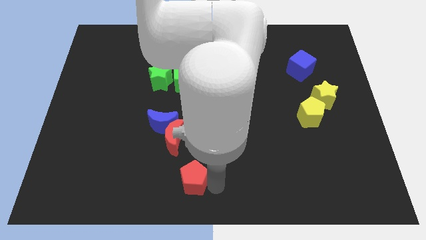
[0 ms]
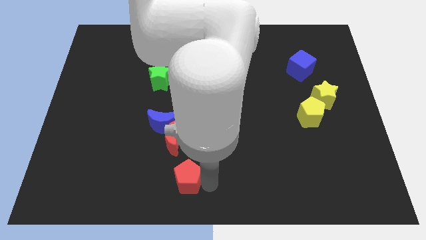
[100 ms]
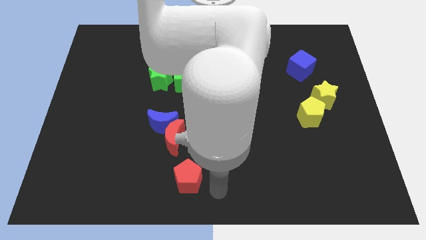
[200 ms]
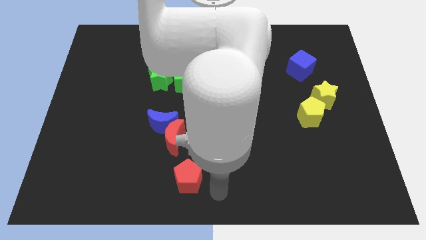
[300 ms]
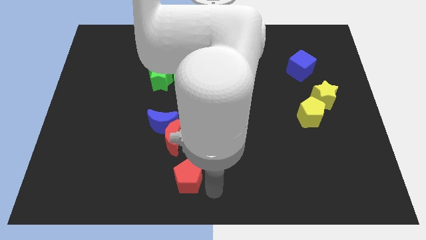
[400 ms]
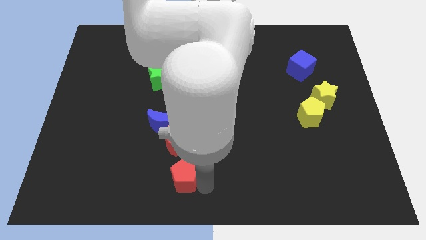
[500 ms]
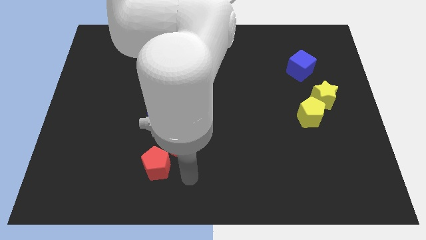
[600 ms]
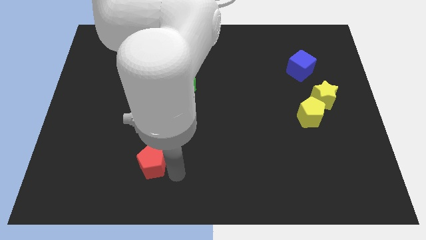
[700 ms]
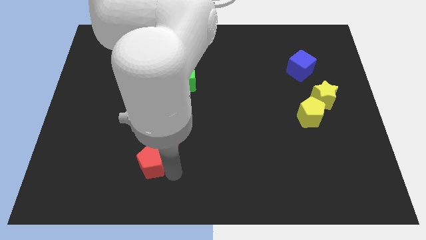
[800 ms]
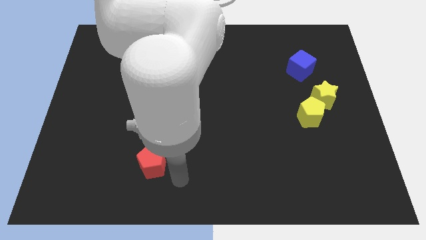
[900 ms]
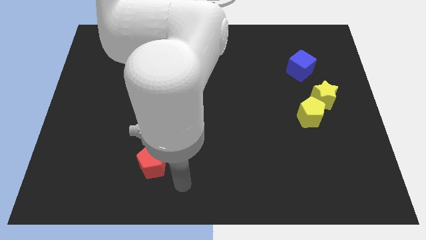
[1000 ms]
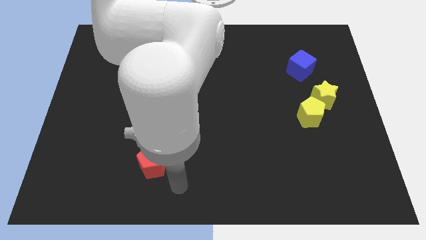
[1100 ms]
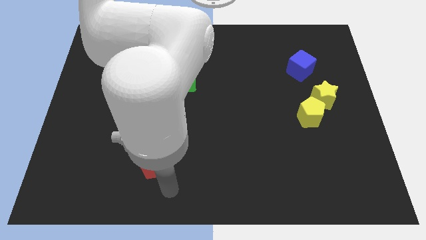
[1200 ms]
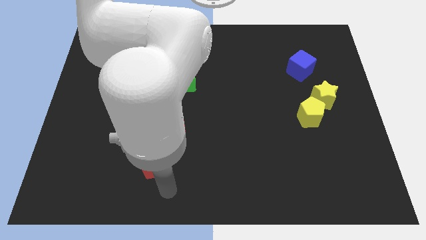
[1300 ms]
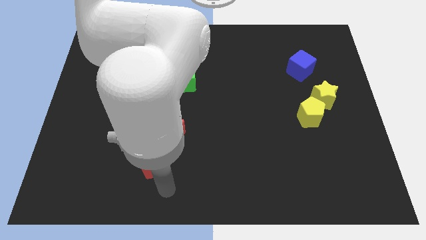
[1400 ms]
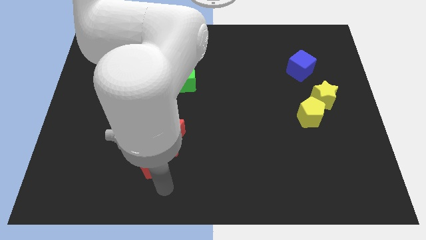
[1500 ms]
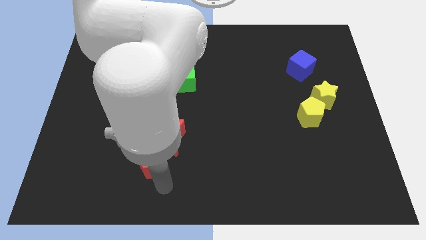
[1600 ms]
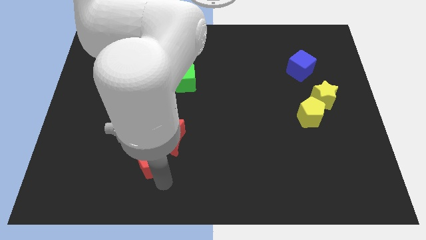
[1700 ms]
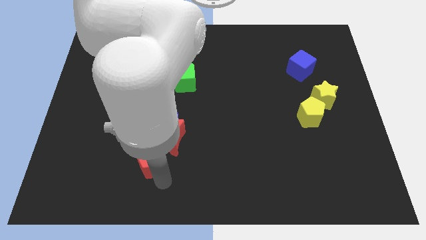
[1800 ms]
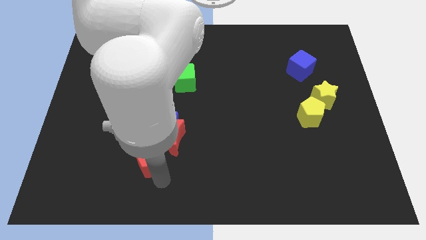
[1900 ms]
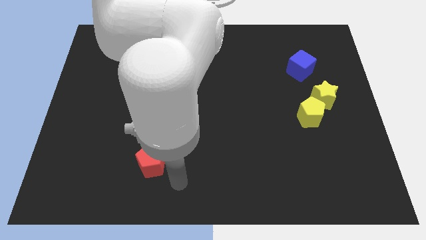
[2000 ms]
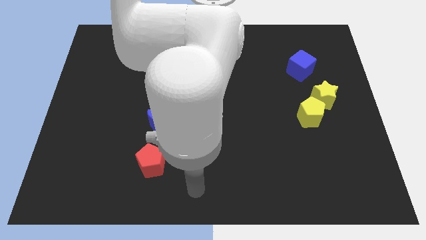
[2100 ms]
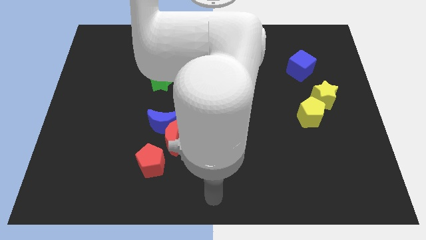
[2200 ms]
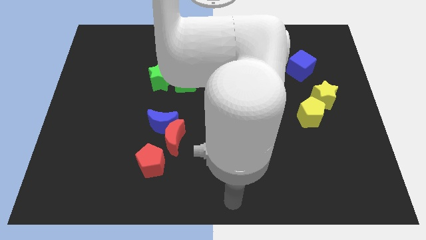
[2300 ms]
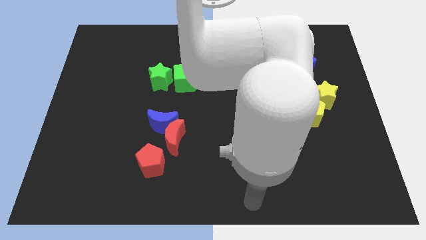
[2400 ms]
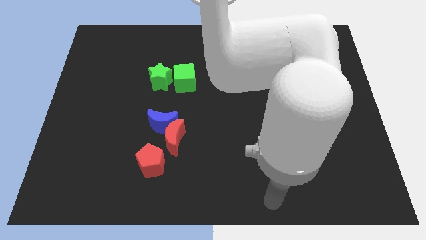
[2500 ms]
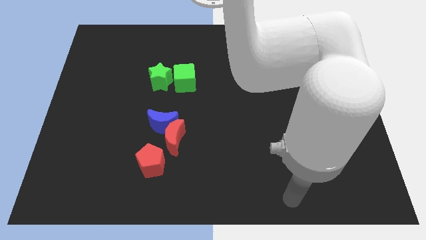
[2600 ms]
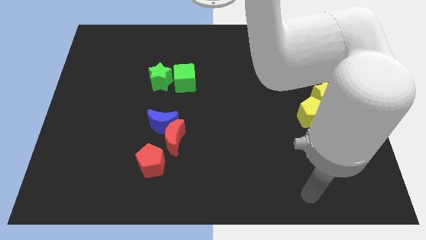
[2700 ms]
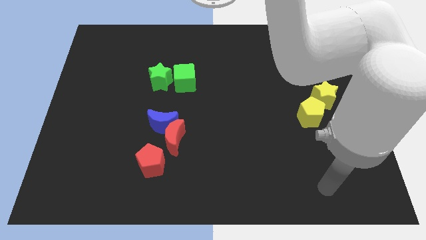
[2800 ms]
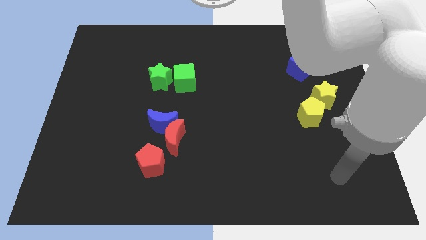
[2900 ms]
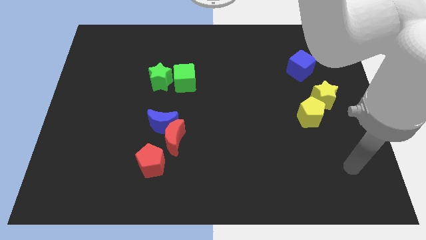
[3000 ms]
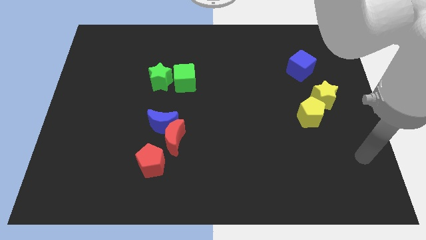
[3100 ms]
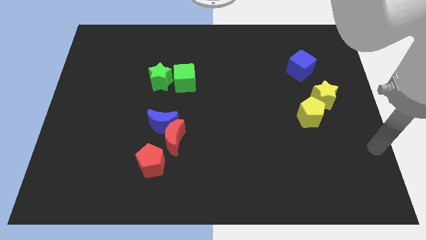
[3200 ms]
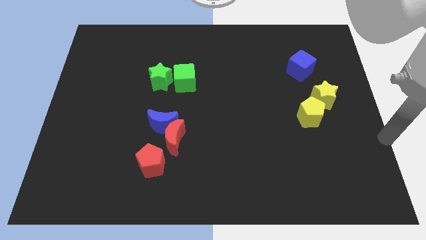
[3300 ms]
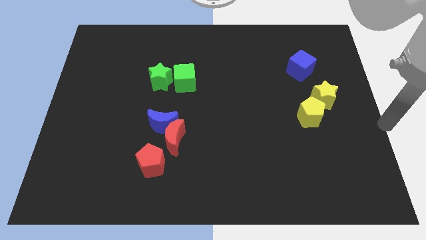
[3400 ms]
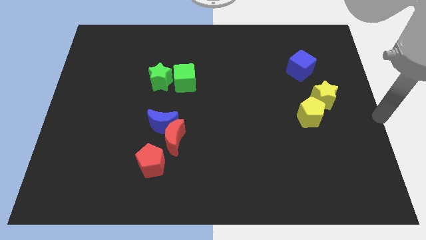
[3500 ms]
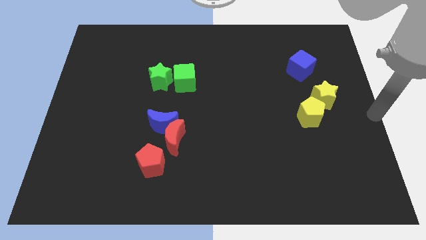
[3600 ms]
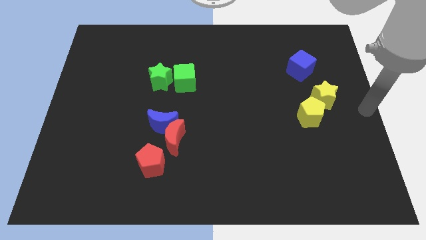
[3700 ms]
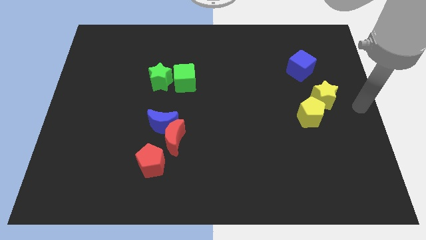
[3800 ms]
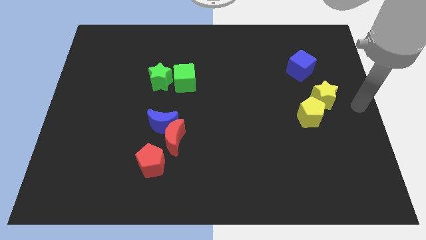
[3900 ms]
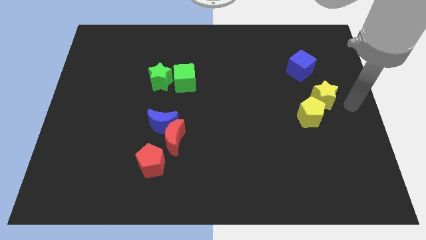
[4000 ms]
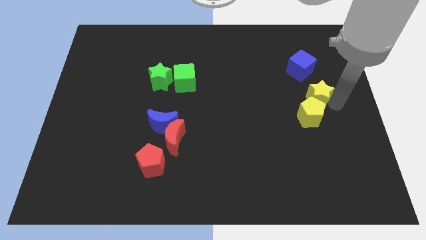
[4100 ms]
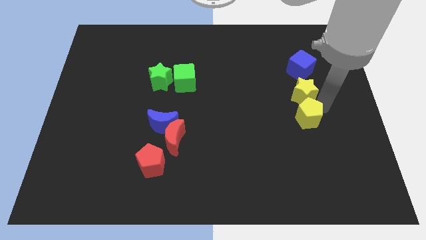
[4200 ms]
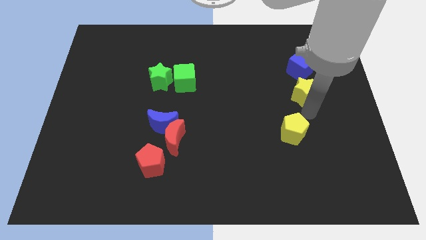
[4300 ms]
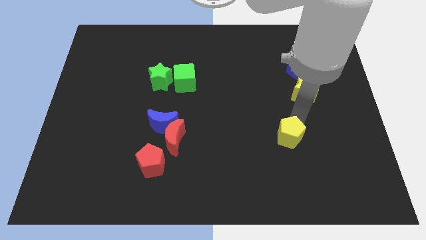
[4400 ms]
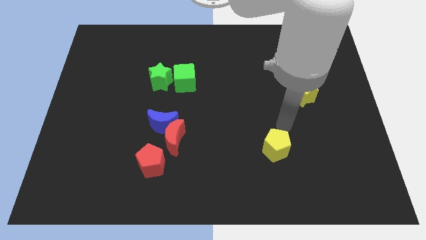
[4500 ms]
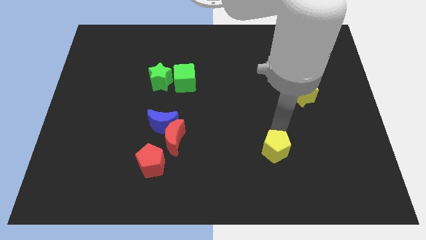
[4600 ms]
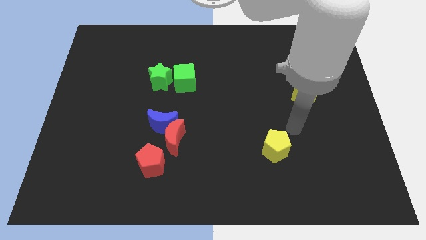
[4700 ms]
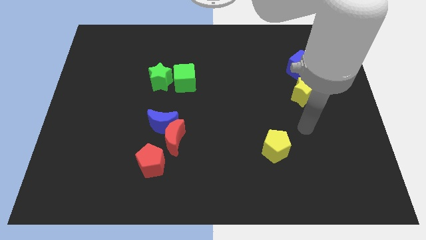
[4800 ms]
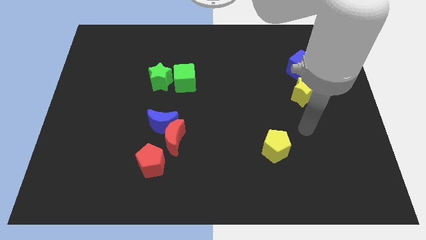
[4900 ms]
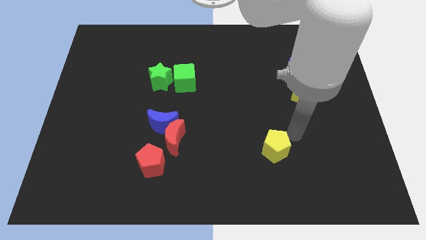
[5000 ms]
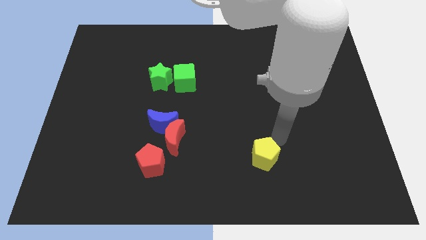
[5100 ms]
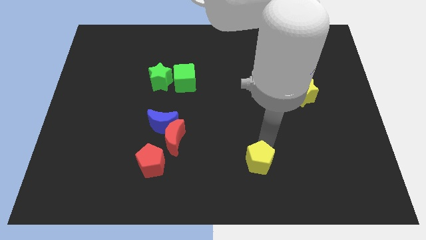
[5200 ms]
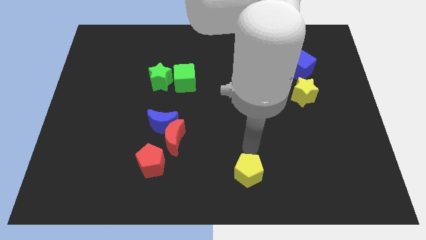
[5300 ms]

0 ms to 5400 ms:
push the yellow pentagon parallel to red pentagon

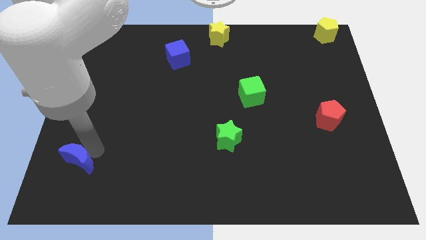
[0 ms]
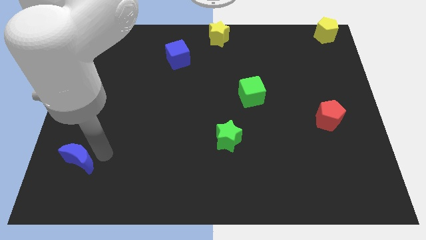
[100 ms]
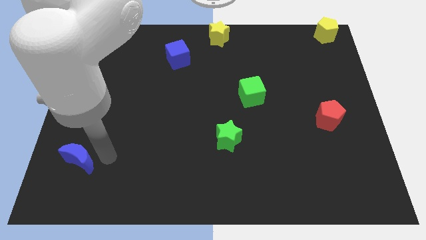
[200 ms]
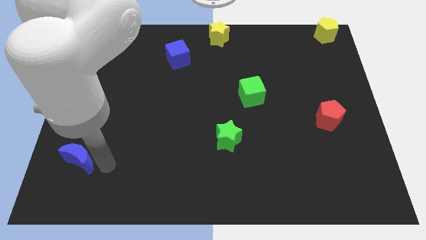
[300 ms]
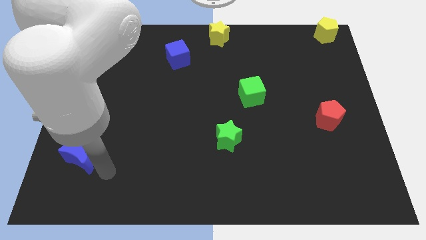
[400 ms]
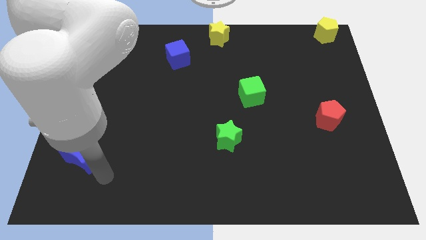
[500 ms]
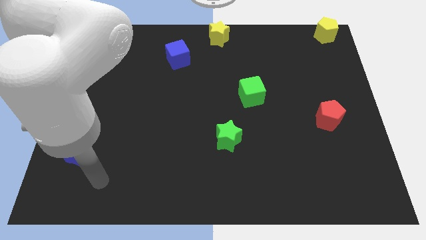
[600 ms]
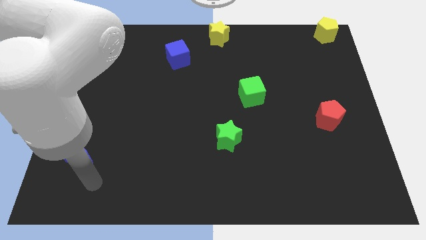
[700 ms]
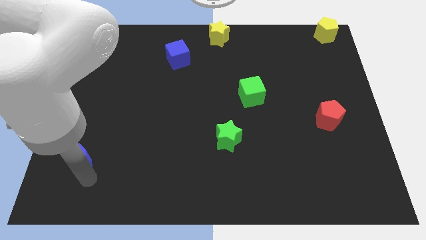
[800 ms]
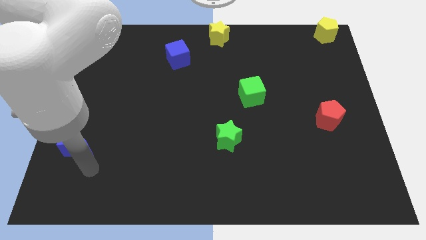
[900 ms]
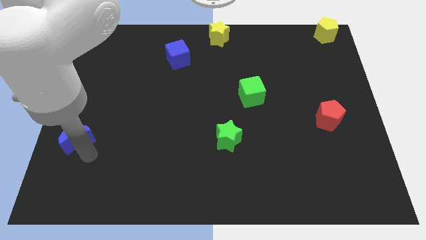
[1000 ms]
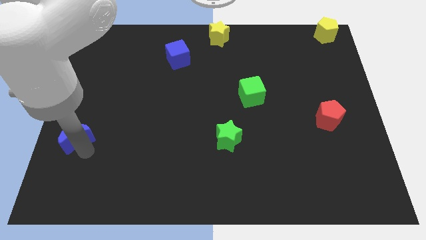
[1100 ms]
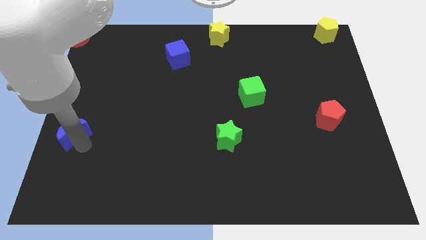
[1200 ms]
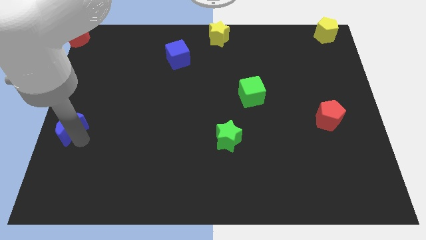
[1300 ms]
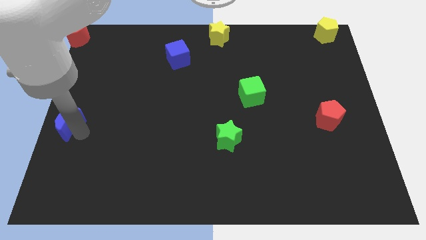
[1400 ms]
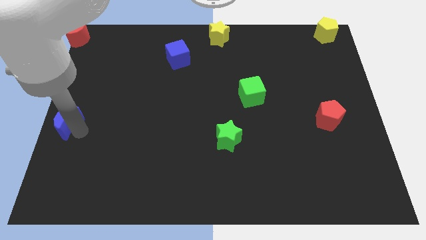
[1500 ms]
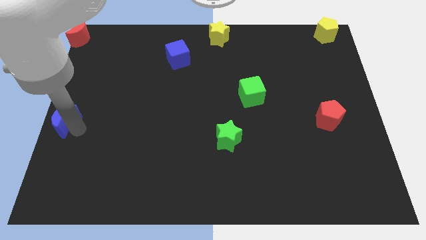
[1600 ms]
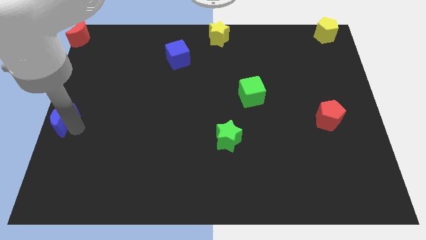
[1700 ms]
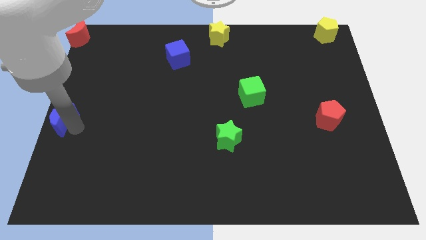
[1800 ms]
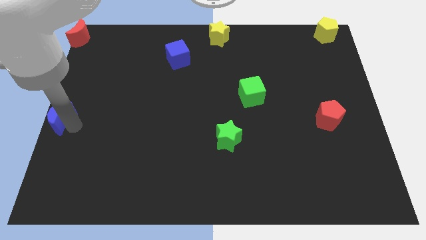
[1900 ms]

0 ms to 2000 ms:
move the blue moon to the bottom side of the red moon

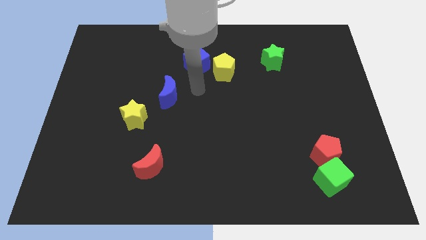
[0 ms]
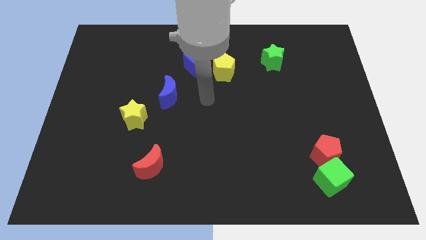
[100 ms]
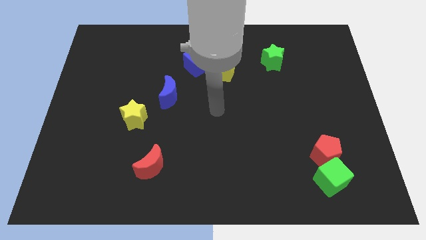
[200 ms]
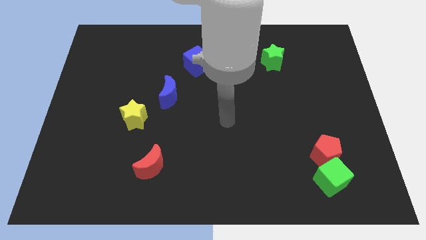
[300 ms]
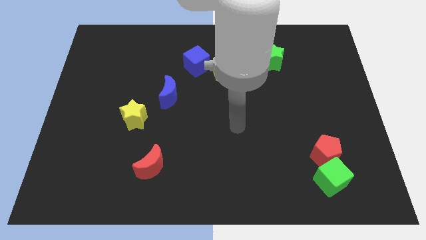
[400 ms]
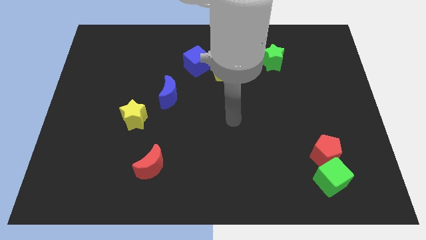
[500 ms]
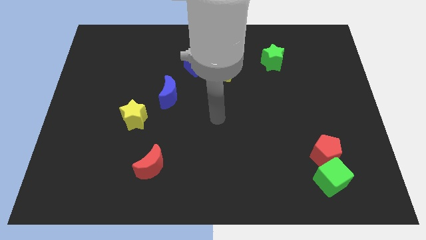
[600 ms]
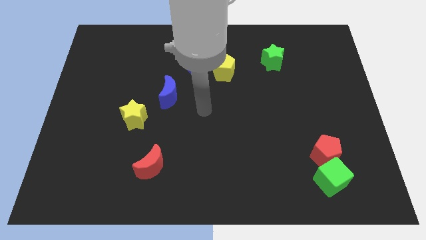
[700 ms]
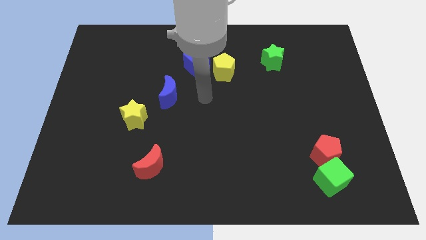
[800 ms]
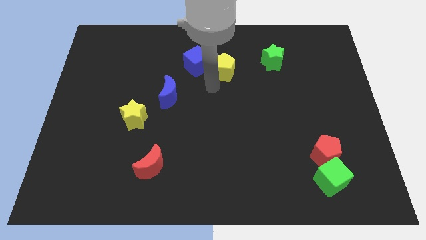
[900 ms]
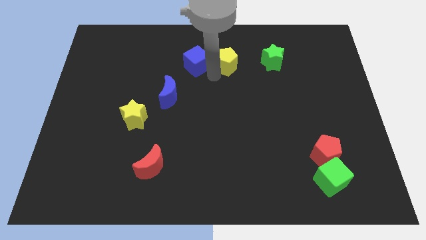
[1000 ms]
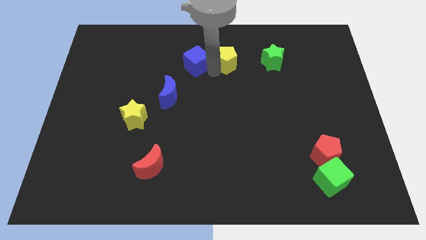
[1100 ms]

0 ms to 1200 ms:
slightly push the yellow pentagon to the top

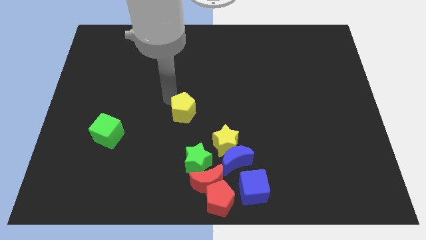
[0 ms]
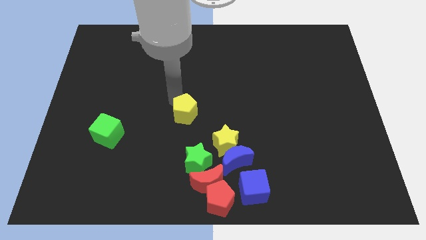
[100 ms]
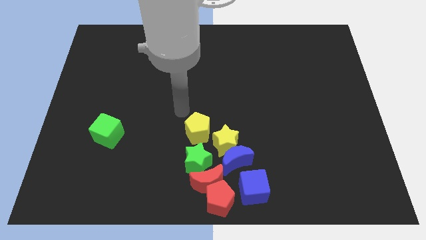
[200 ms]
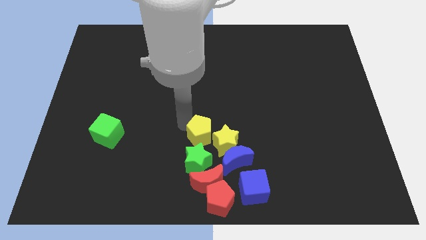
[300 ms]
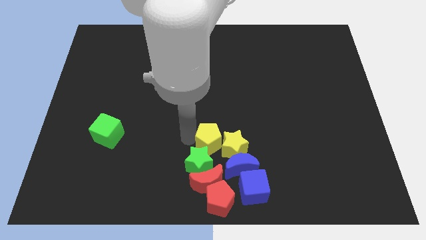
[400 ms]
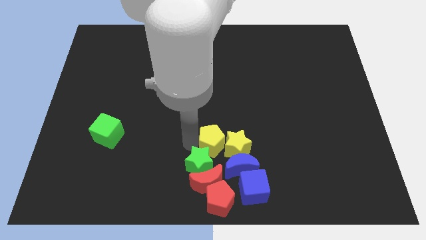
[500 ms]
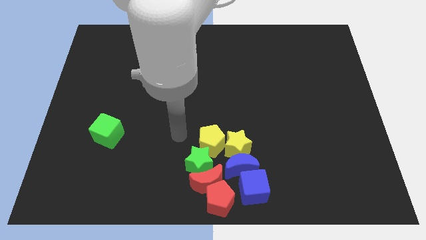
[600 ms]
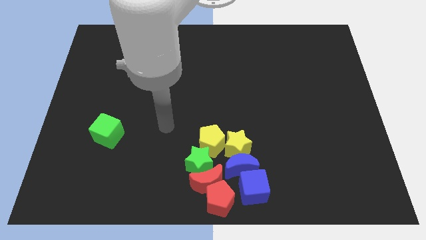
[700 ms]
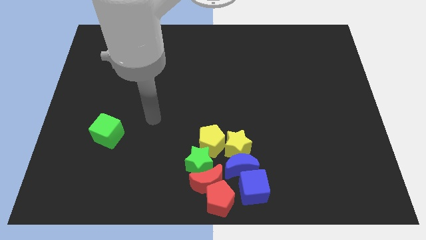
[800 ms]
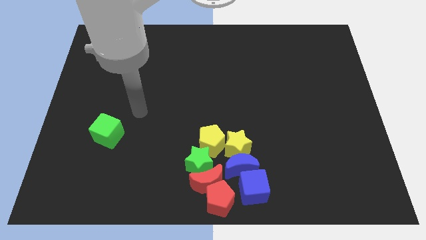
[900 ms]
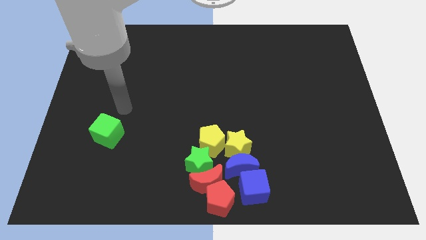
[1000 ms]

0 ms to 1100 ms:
push the yellow pentagon into the group of blocks
